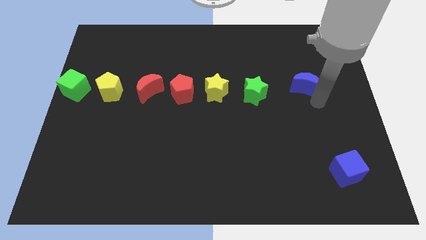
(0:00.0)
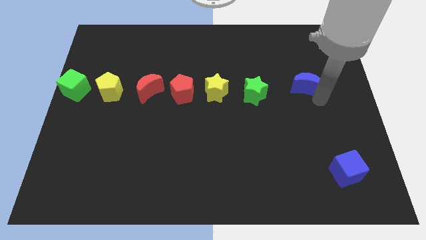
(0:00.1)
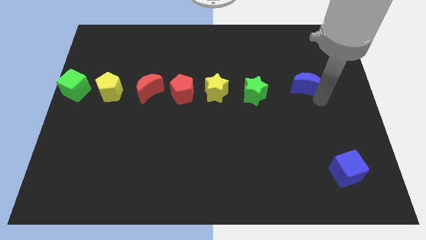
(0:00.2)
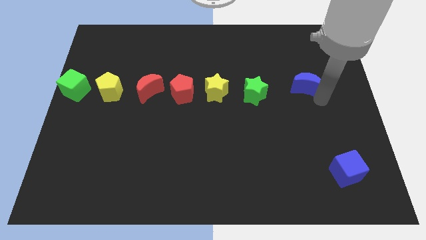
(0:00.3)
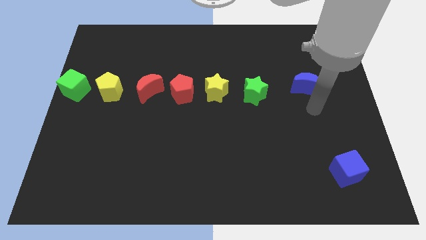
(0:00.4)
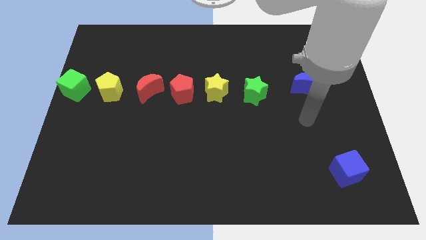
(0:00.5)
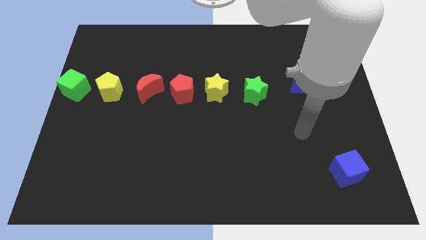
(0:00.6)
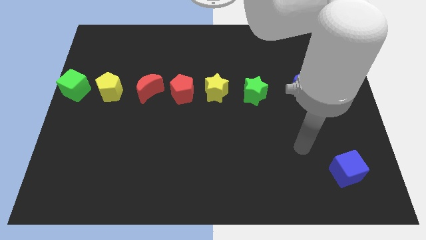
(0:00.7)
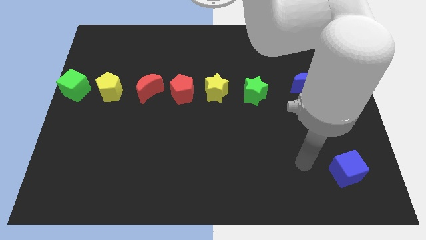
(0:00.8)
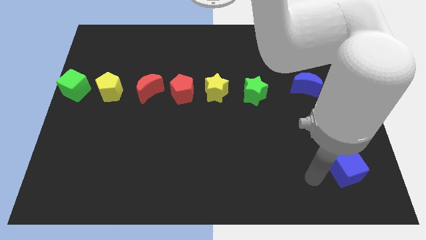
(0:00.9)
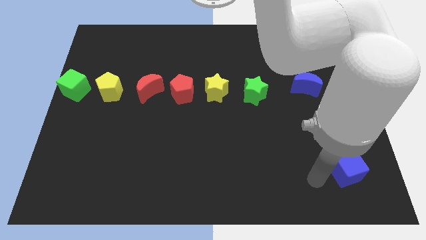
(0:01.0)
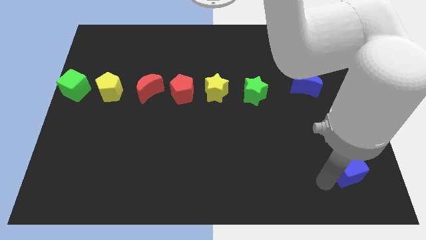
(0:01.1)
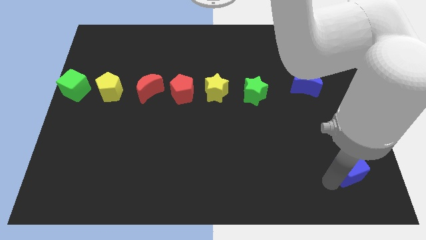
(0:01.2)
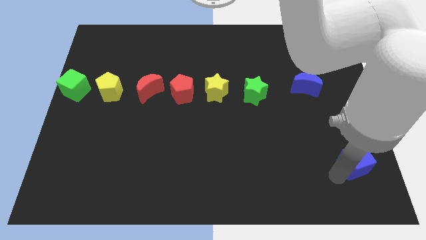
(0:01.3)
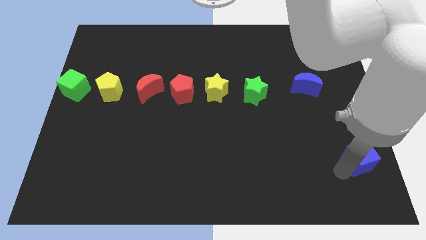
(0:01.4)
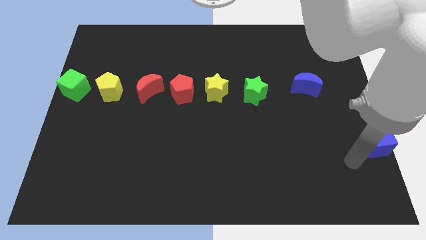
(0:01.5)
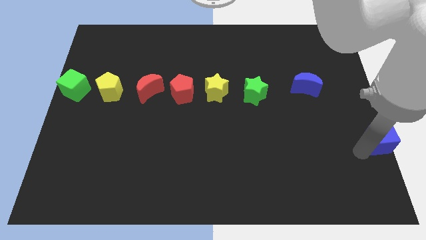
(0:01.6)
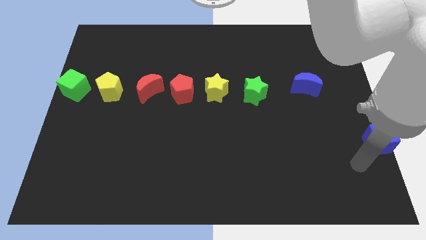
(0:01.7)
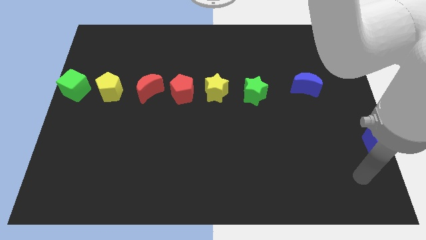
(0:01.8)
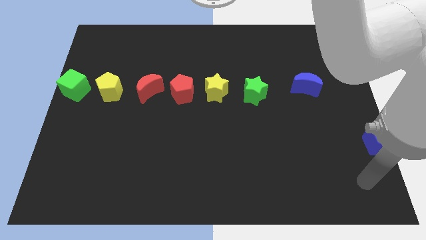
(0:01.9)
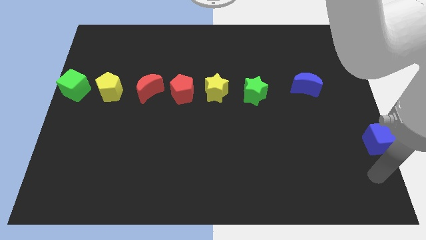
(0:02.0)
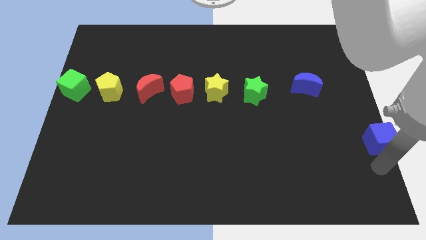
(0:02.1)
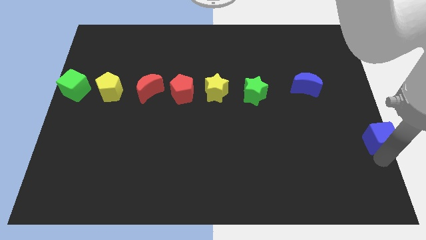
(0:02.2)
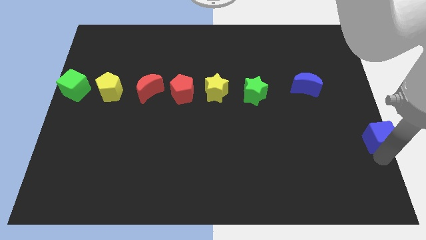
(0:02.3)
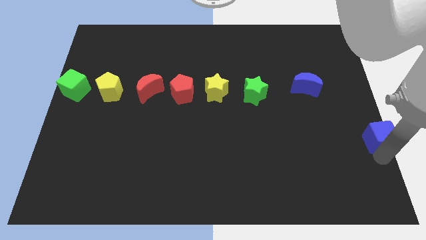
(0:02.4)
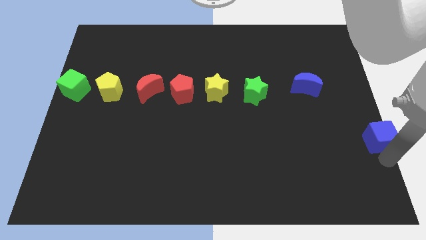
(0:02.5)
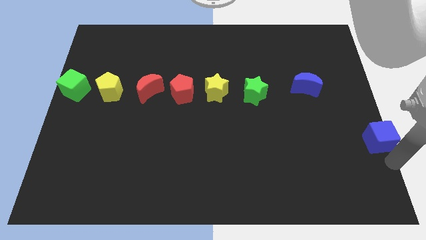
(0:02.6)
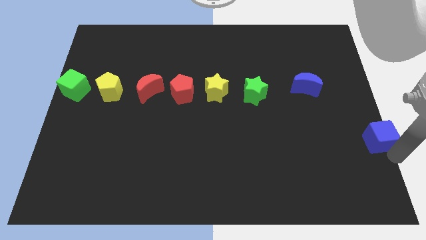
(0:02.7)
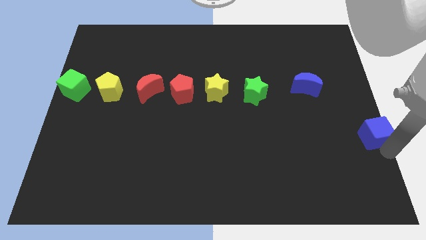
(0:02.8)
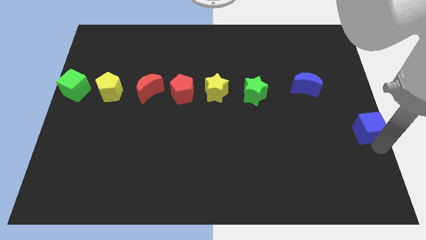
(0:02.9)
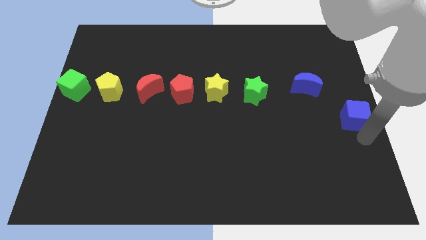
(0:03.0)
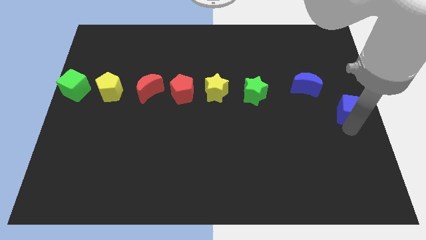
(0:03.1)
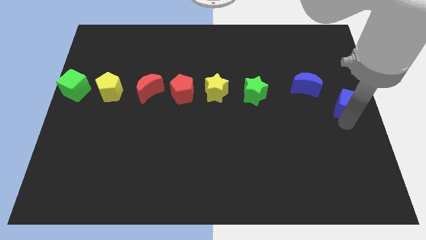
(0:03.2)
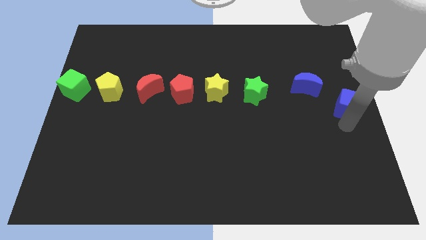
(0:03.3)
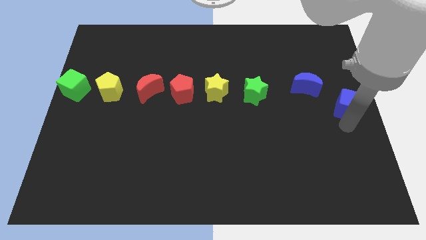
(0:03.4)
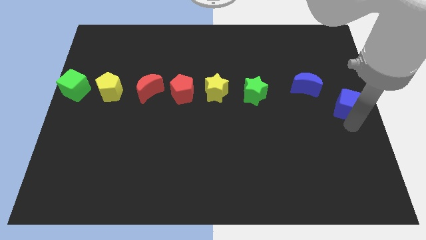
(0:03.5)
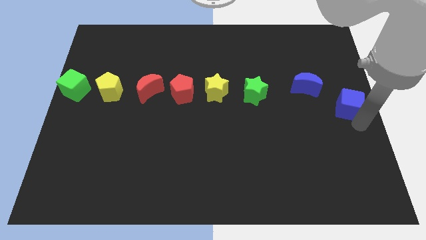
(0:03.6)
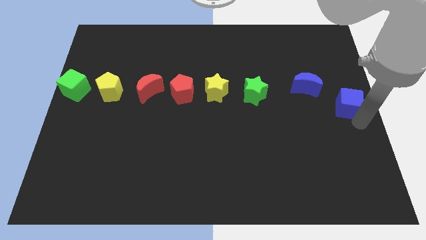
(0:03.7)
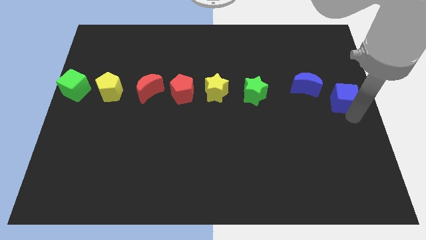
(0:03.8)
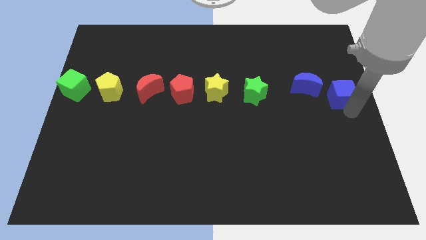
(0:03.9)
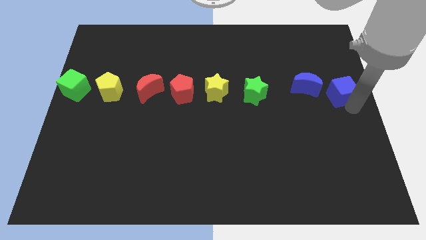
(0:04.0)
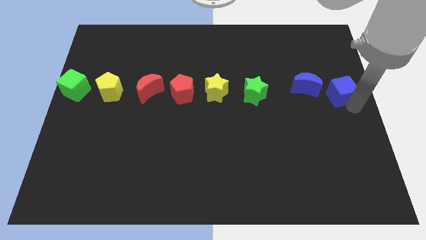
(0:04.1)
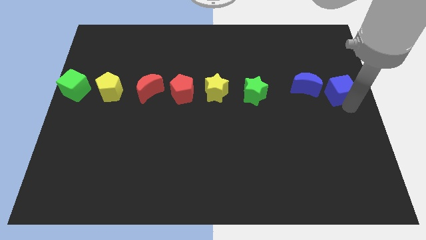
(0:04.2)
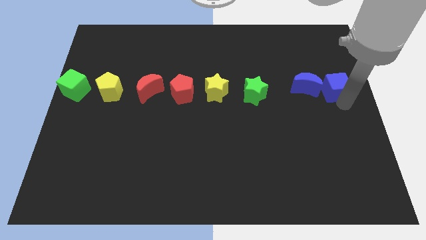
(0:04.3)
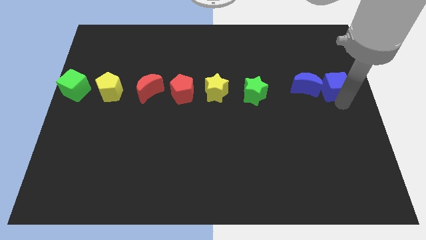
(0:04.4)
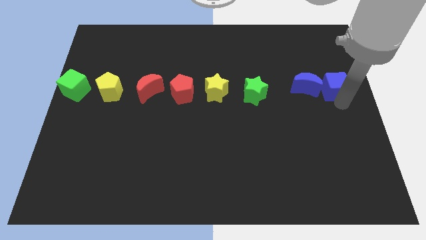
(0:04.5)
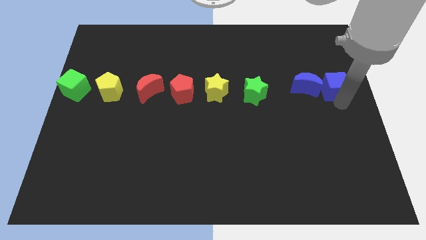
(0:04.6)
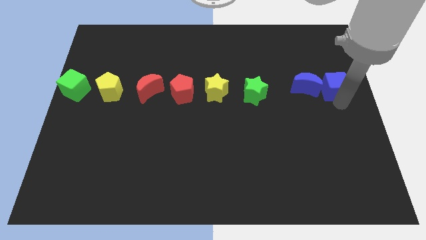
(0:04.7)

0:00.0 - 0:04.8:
place the blue cube to the center right of the board

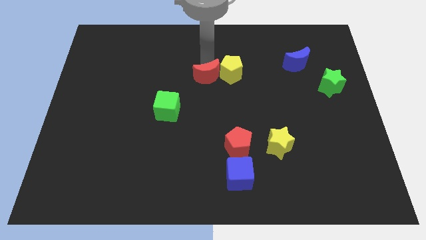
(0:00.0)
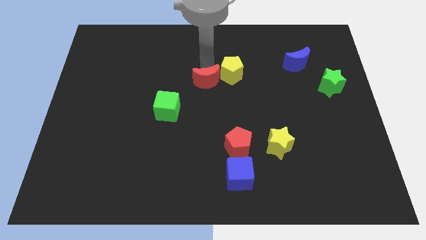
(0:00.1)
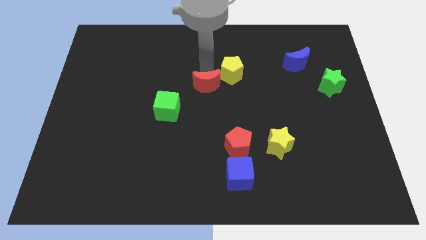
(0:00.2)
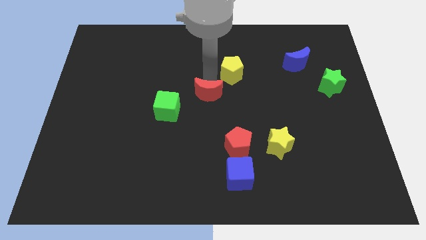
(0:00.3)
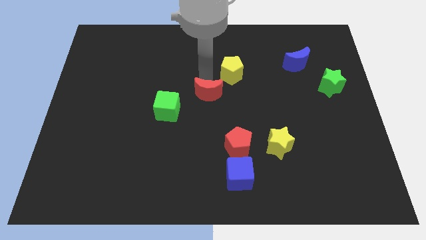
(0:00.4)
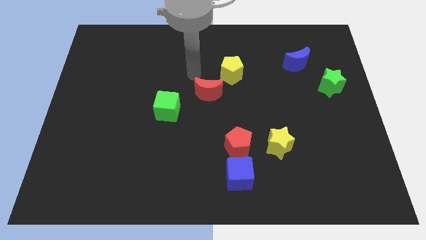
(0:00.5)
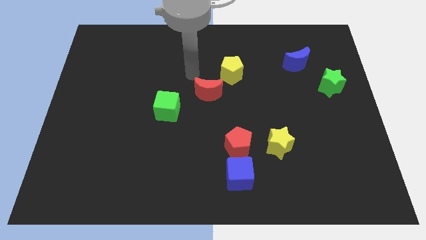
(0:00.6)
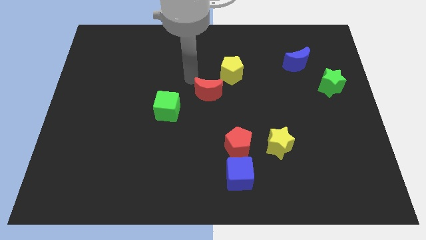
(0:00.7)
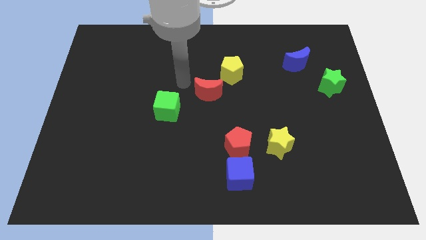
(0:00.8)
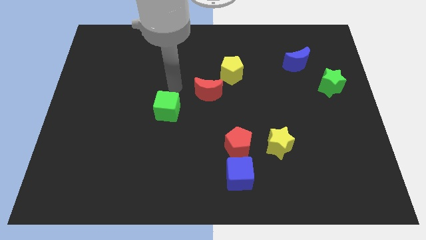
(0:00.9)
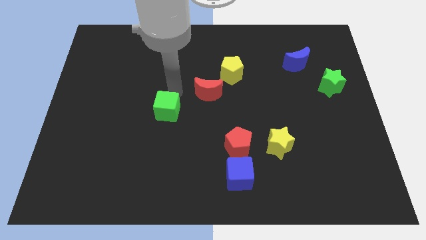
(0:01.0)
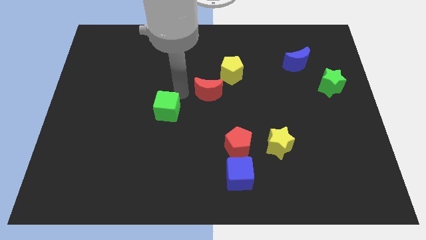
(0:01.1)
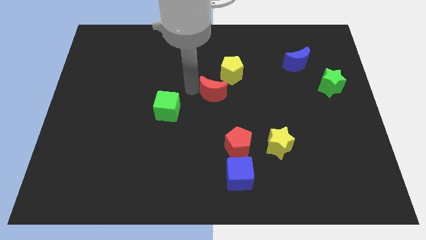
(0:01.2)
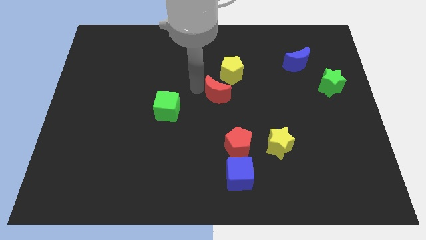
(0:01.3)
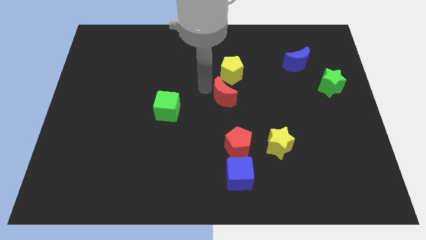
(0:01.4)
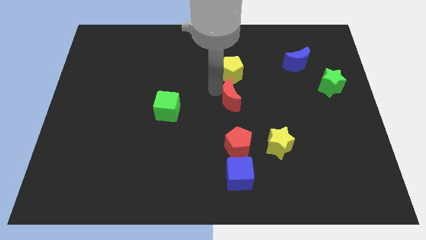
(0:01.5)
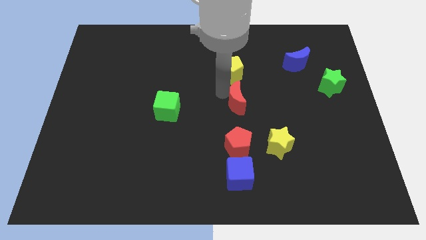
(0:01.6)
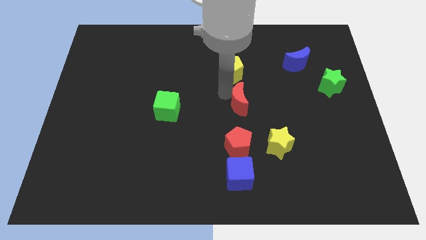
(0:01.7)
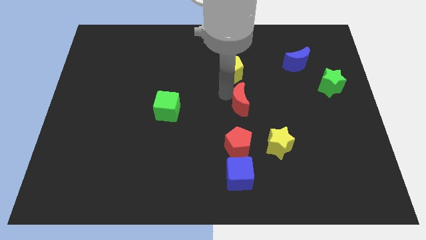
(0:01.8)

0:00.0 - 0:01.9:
move the red moon to the bottom right side of the yellow pentagon

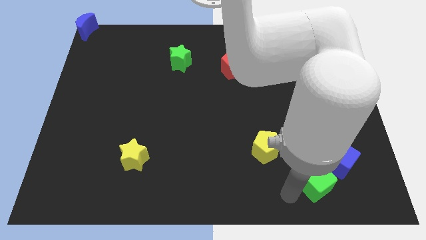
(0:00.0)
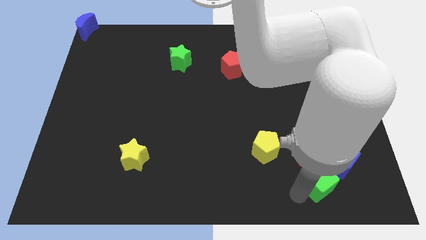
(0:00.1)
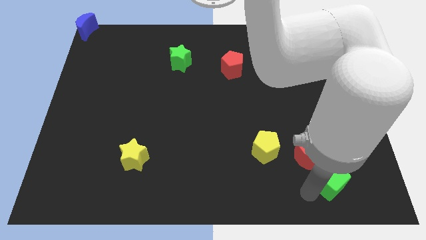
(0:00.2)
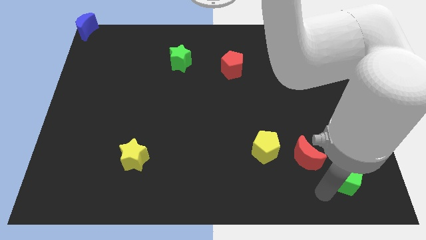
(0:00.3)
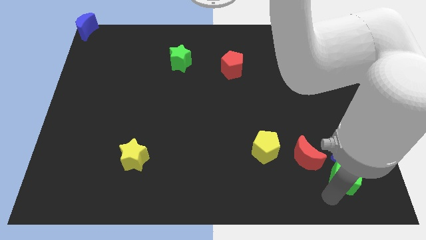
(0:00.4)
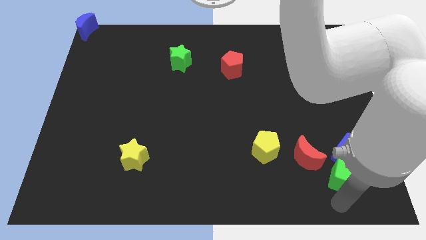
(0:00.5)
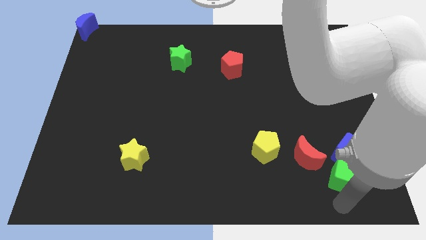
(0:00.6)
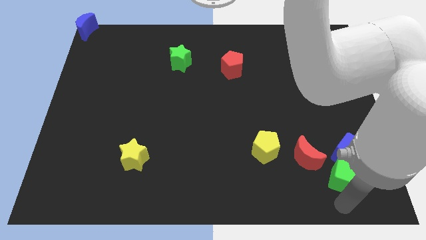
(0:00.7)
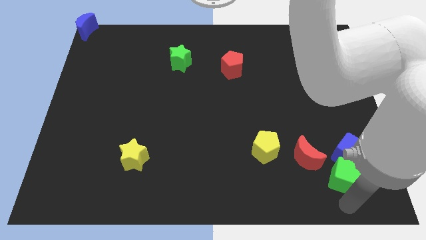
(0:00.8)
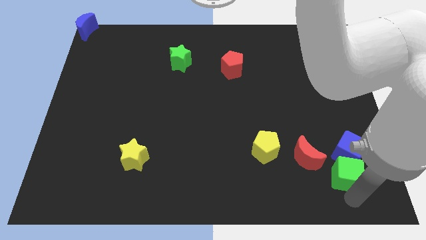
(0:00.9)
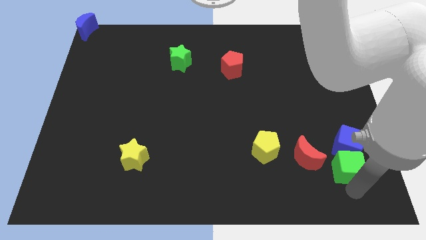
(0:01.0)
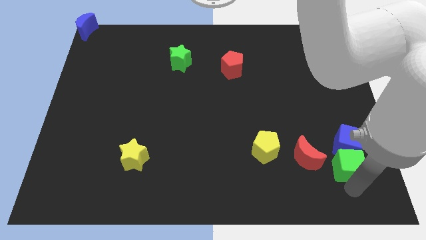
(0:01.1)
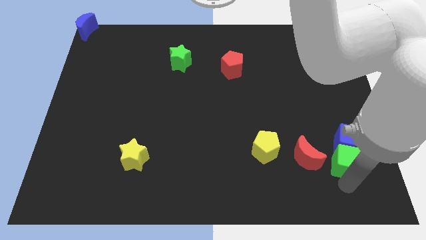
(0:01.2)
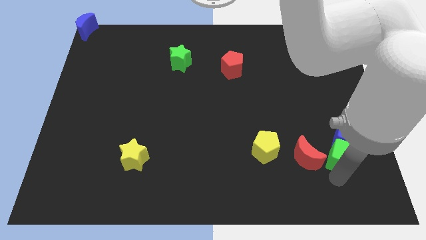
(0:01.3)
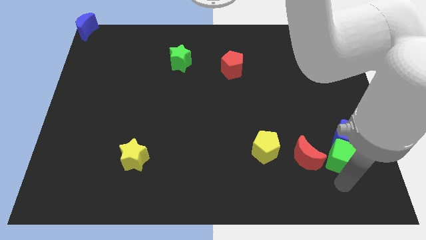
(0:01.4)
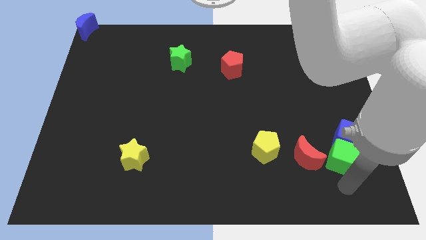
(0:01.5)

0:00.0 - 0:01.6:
push the green cube into the blue cube

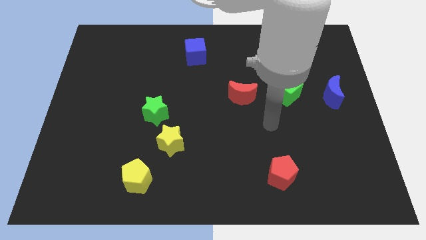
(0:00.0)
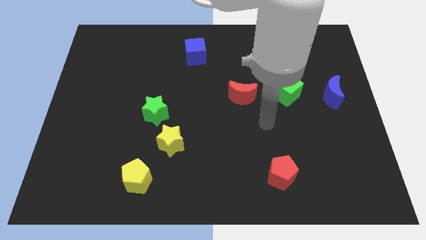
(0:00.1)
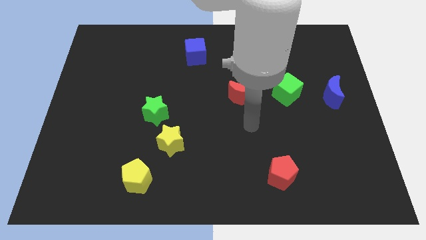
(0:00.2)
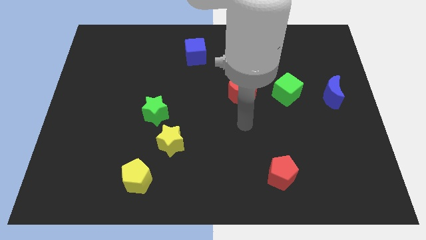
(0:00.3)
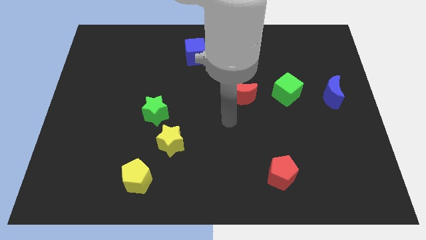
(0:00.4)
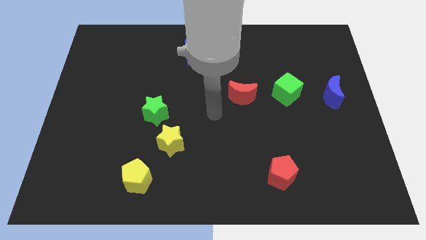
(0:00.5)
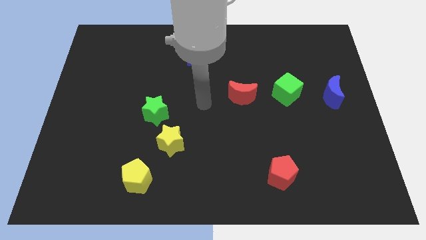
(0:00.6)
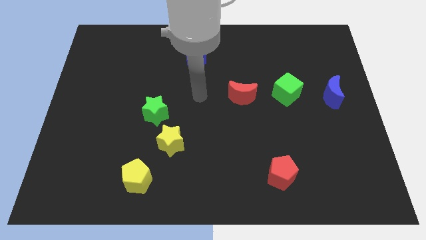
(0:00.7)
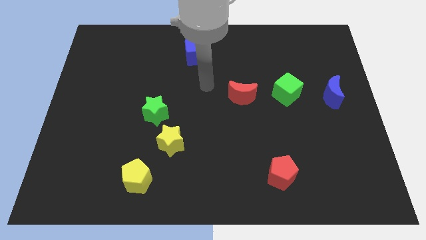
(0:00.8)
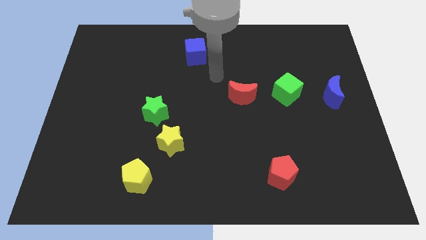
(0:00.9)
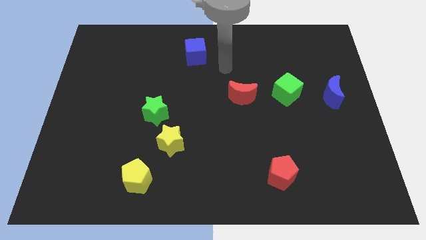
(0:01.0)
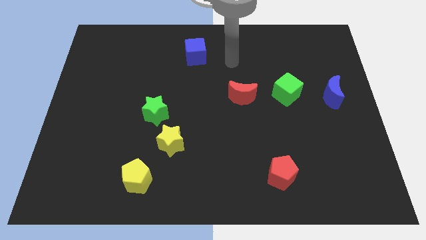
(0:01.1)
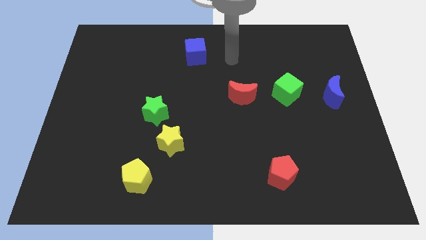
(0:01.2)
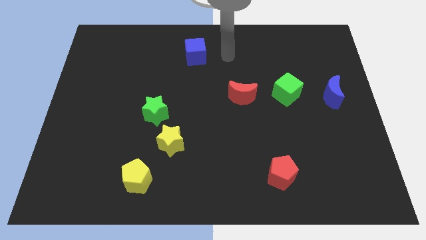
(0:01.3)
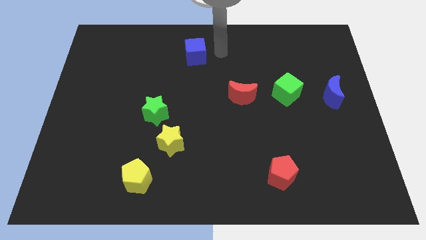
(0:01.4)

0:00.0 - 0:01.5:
put your hand parallel right to the blue cube
